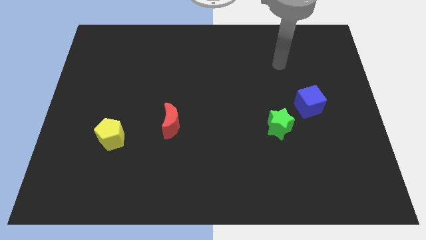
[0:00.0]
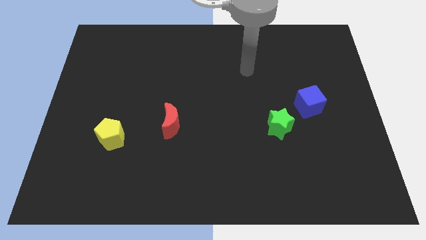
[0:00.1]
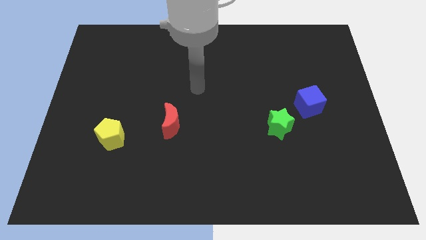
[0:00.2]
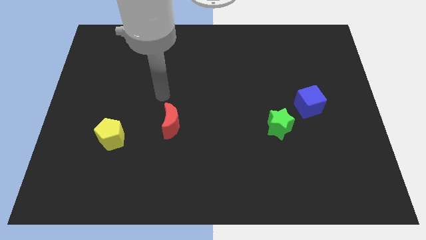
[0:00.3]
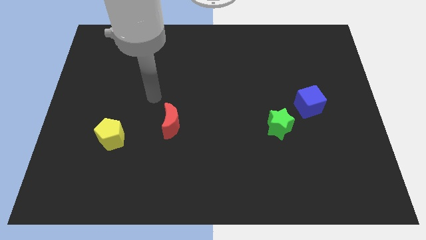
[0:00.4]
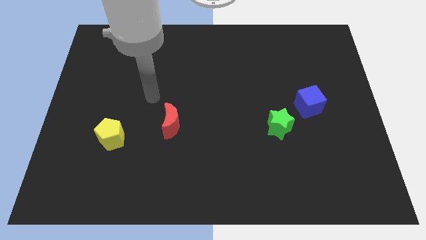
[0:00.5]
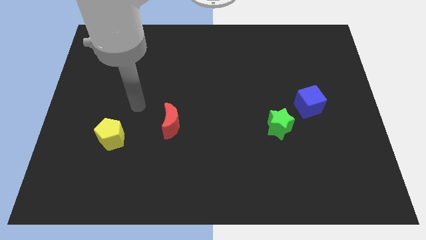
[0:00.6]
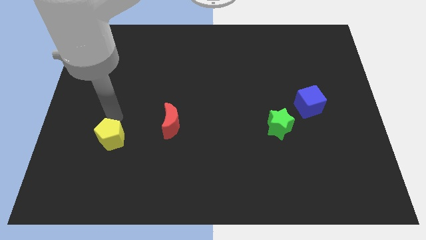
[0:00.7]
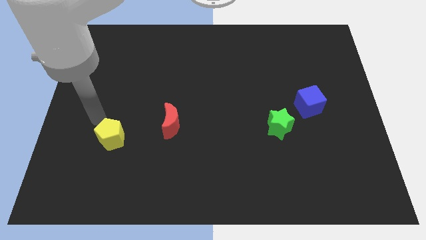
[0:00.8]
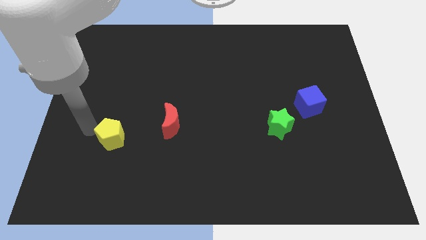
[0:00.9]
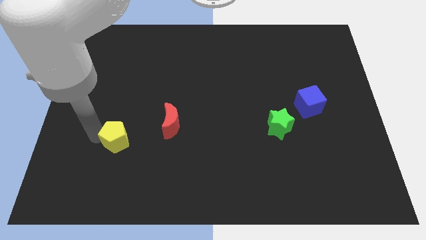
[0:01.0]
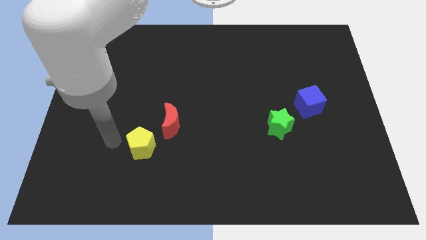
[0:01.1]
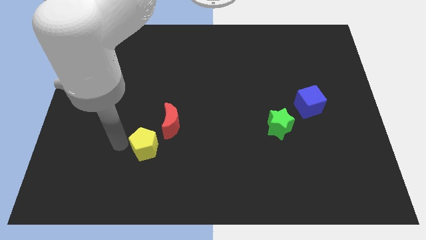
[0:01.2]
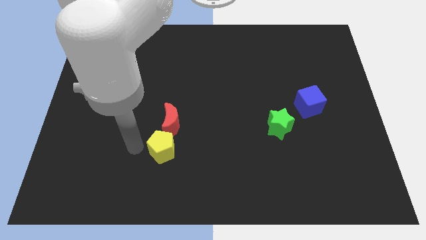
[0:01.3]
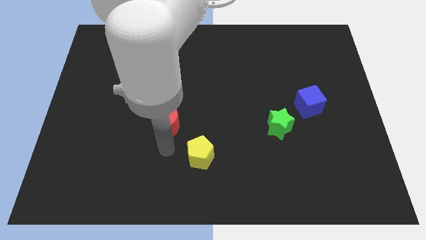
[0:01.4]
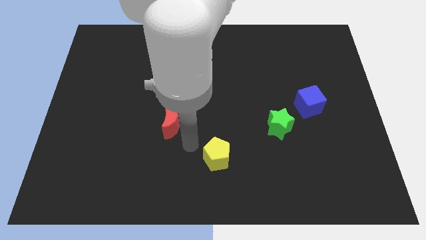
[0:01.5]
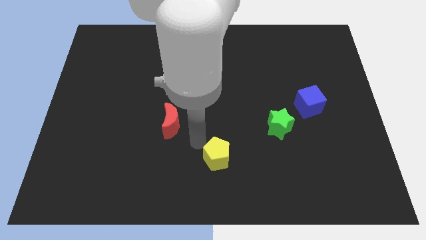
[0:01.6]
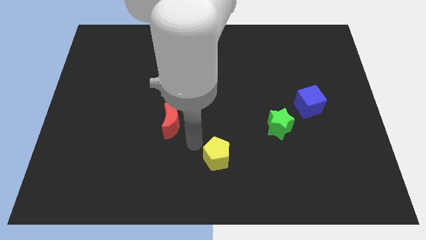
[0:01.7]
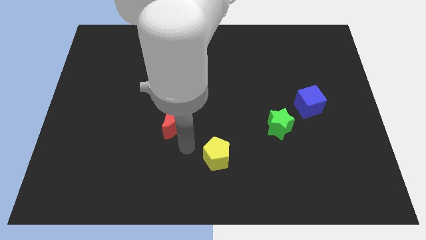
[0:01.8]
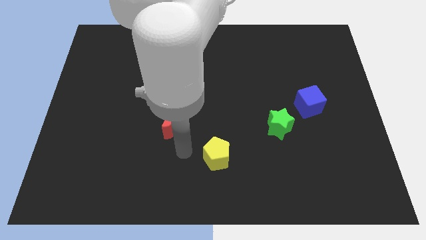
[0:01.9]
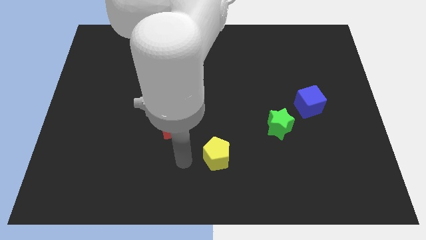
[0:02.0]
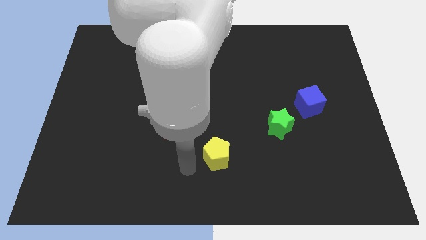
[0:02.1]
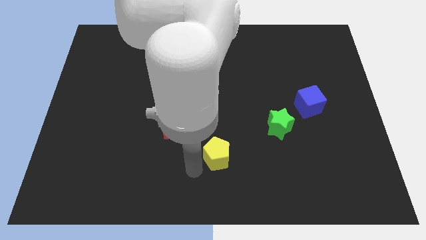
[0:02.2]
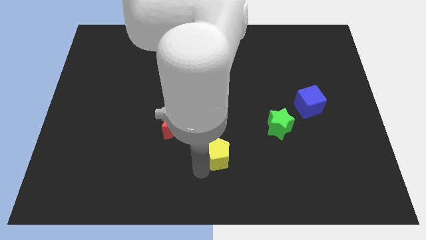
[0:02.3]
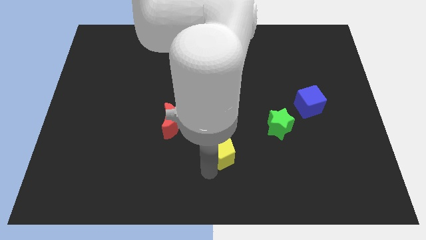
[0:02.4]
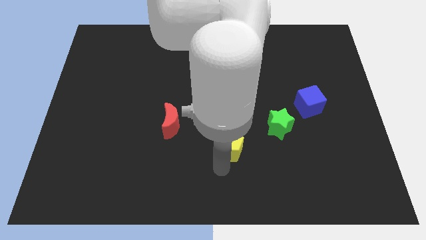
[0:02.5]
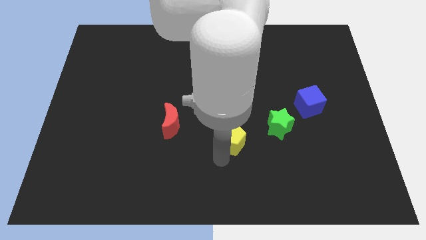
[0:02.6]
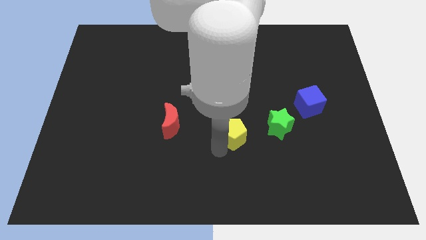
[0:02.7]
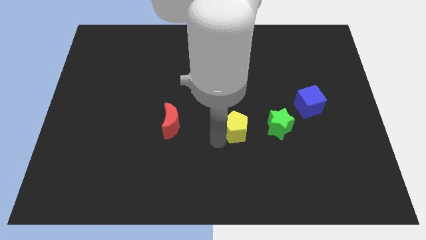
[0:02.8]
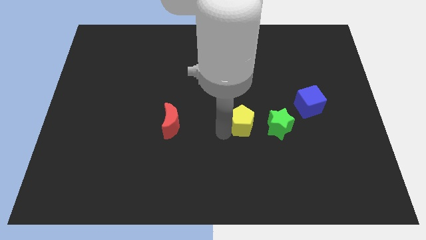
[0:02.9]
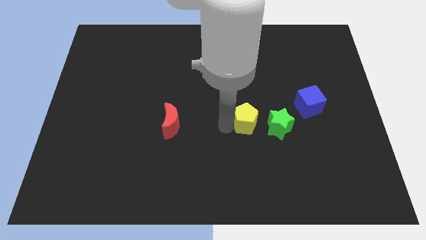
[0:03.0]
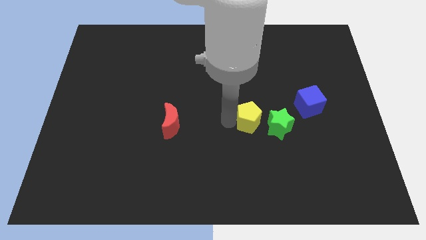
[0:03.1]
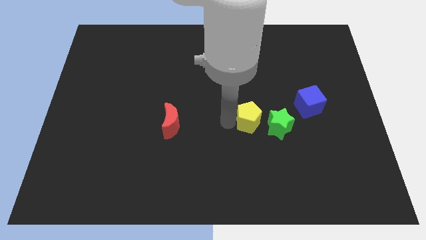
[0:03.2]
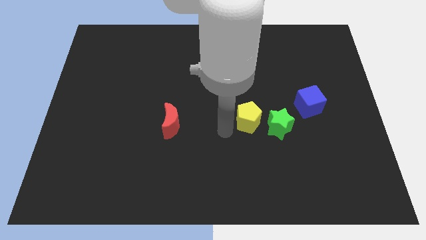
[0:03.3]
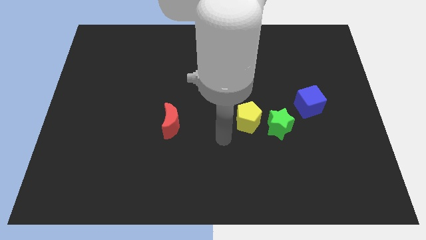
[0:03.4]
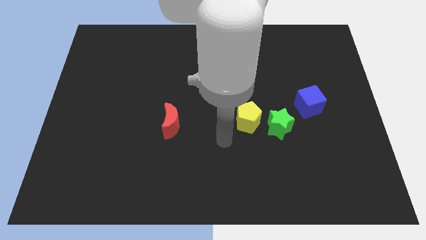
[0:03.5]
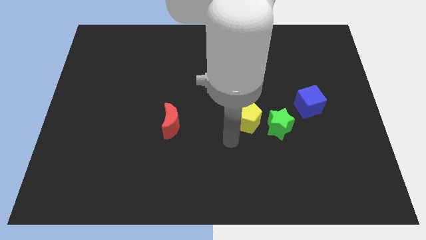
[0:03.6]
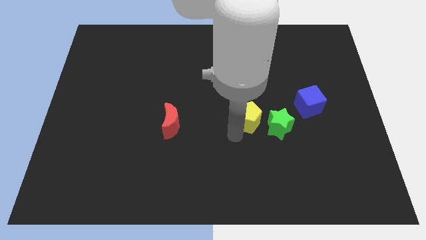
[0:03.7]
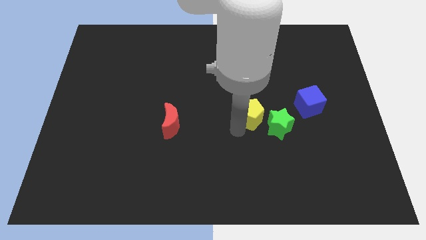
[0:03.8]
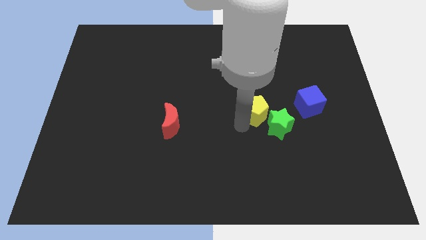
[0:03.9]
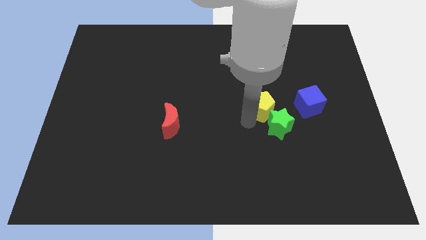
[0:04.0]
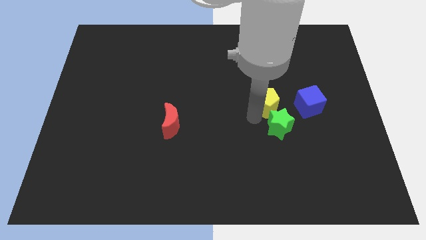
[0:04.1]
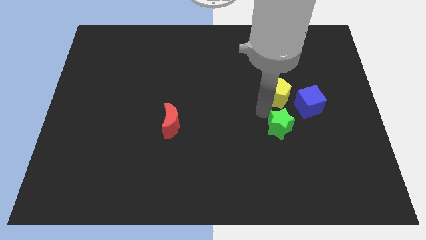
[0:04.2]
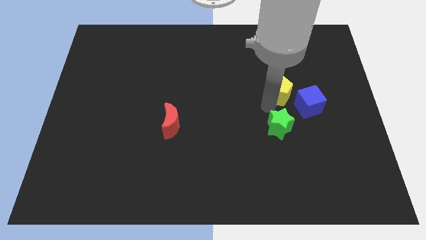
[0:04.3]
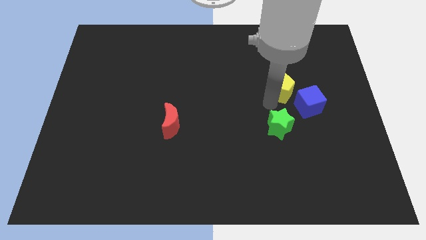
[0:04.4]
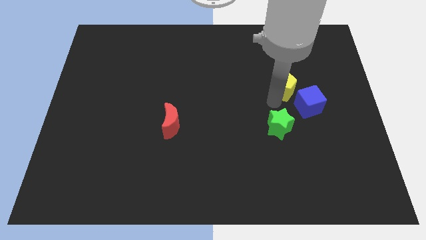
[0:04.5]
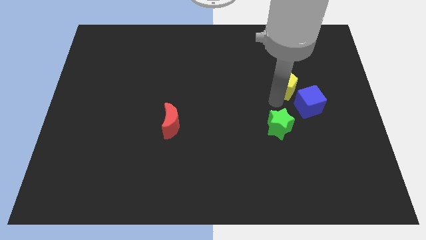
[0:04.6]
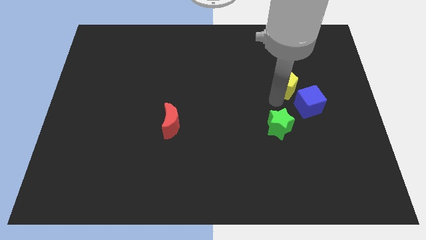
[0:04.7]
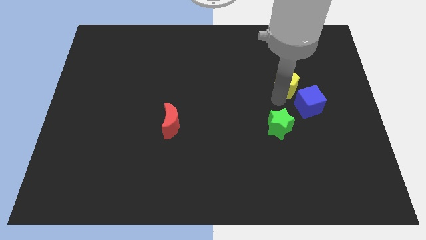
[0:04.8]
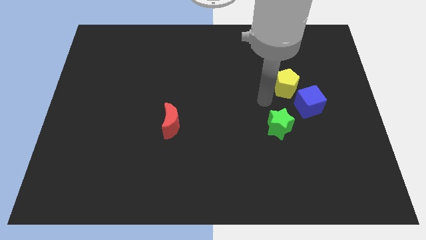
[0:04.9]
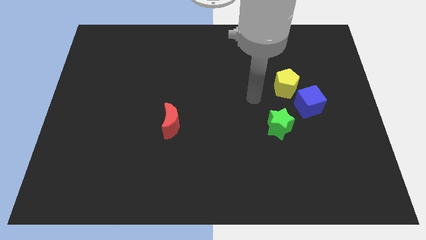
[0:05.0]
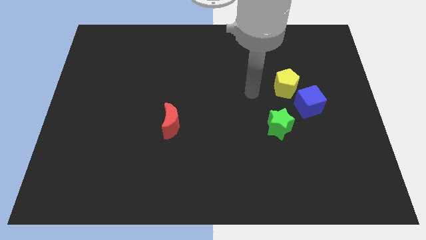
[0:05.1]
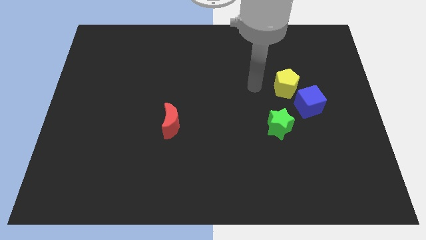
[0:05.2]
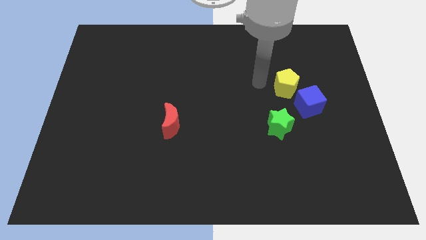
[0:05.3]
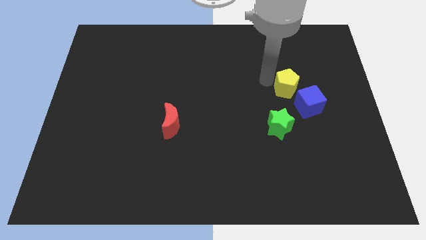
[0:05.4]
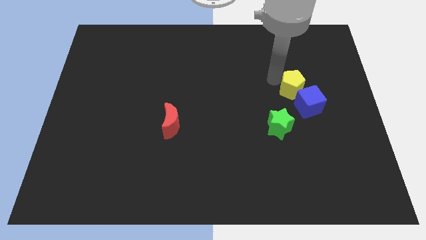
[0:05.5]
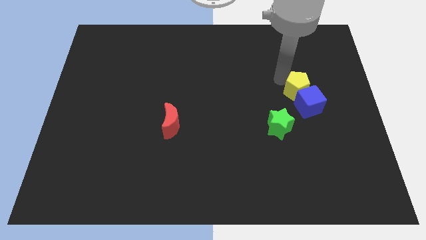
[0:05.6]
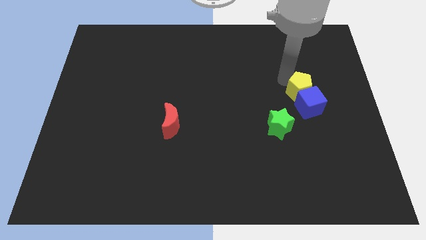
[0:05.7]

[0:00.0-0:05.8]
put the yellow block towards the cube

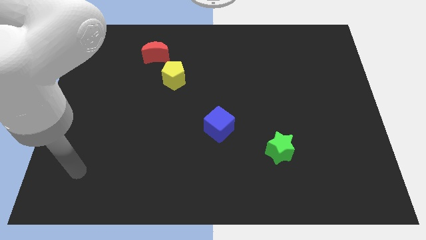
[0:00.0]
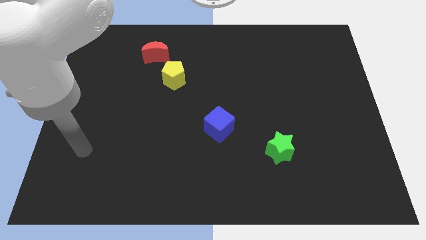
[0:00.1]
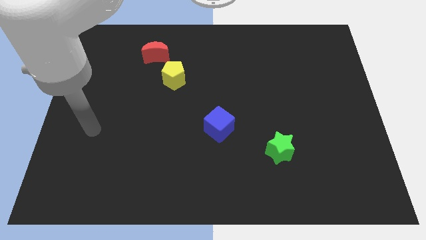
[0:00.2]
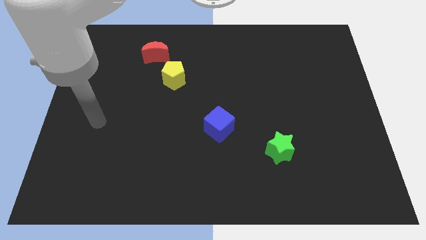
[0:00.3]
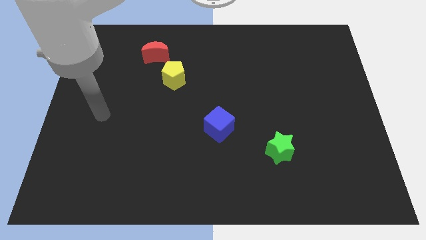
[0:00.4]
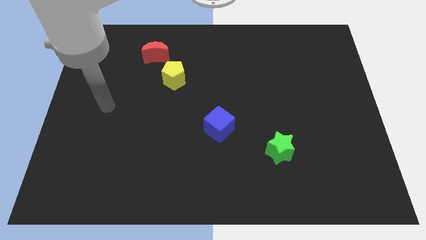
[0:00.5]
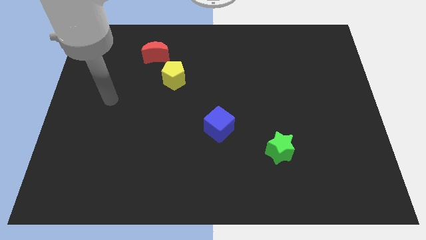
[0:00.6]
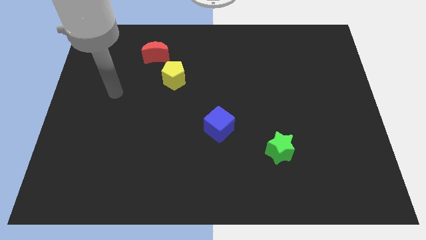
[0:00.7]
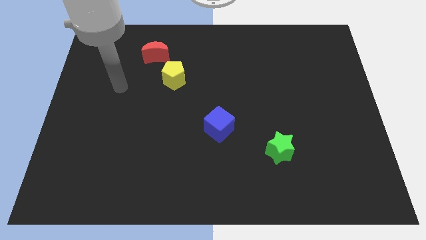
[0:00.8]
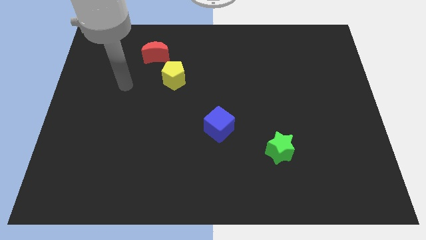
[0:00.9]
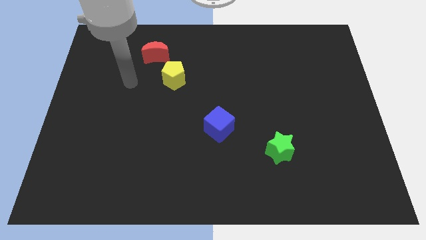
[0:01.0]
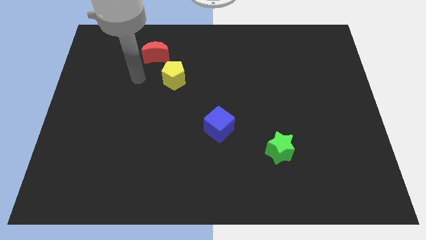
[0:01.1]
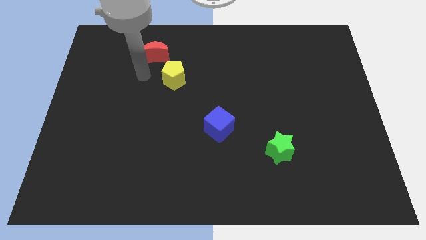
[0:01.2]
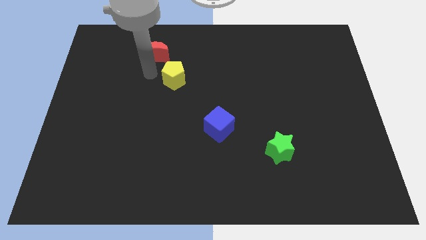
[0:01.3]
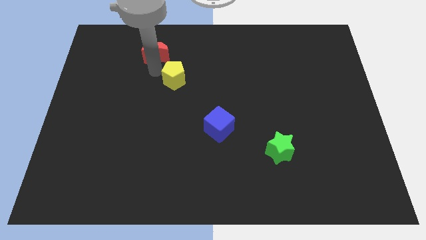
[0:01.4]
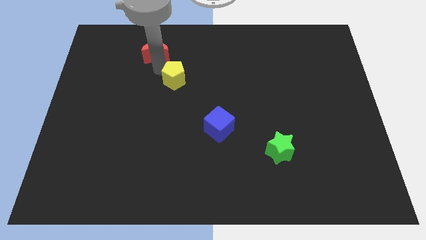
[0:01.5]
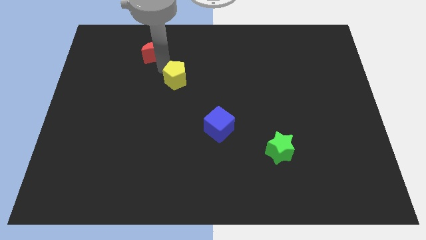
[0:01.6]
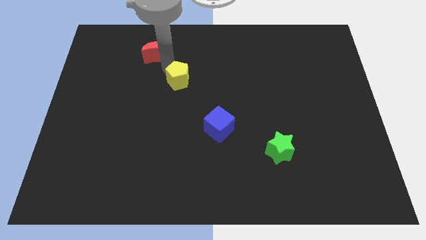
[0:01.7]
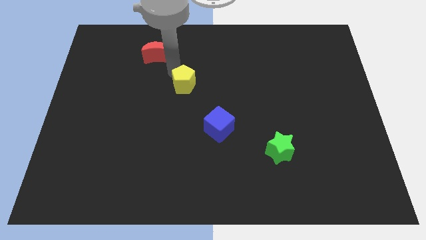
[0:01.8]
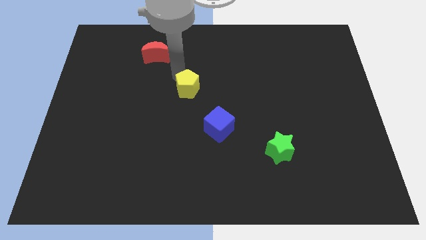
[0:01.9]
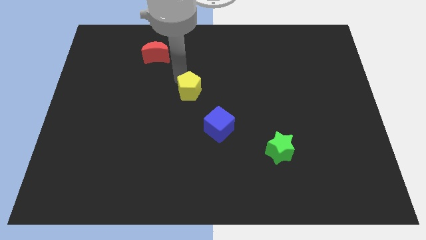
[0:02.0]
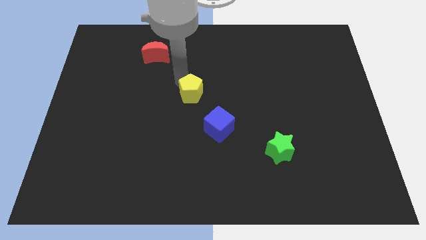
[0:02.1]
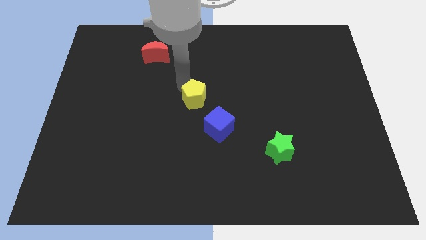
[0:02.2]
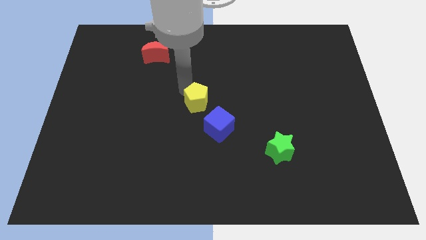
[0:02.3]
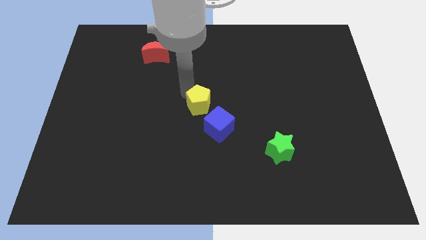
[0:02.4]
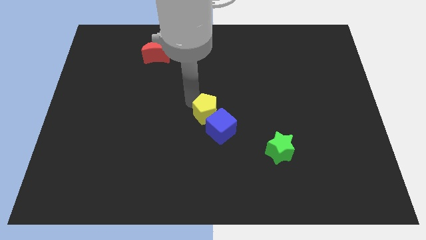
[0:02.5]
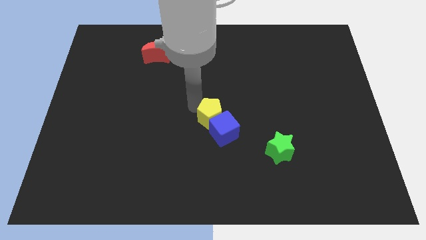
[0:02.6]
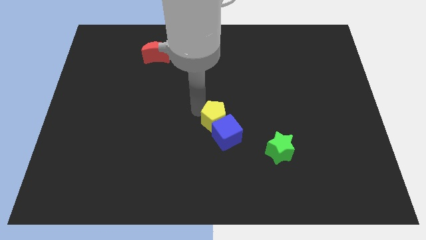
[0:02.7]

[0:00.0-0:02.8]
put the yellow block to the blue block
